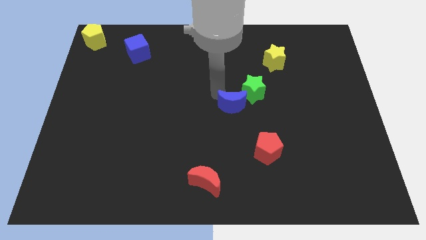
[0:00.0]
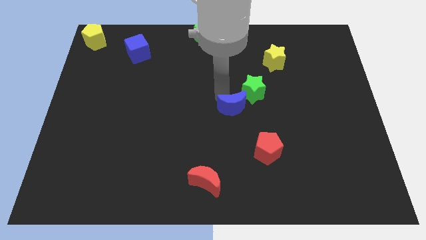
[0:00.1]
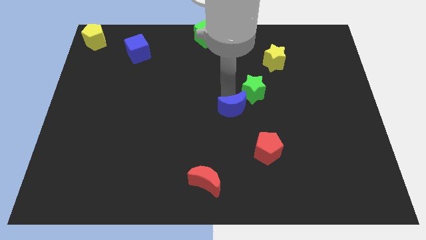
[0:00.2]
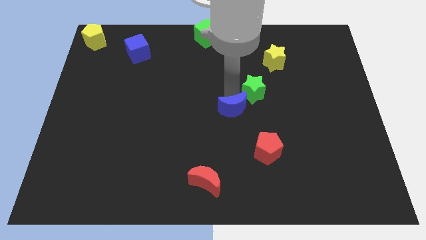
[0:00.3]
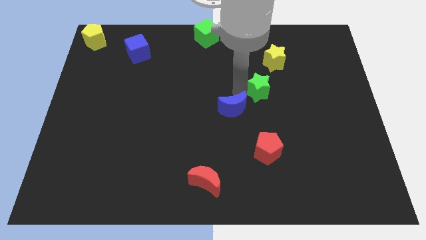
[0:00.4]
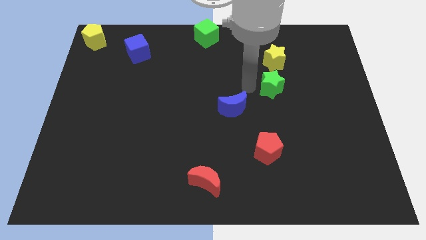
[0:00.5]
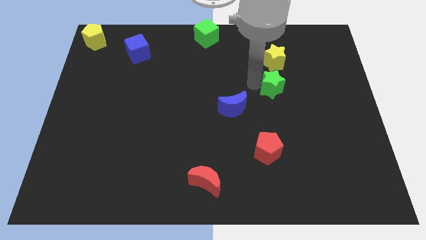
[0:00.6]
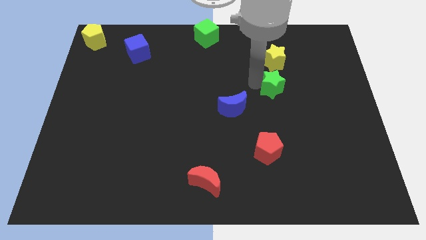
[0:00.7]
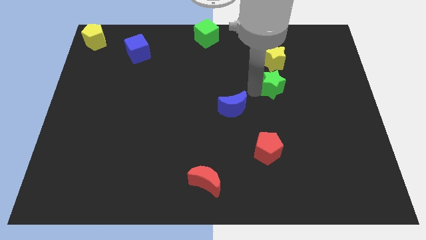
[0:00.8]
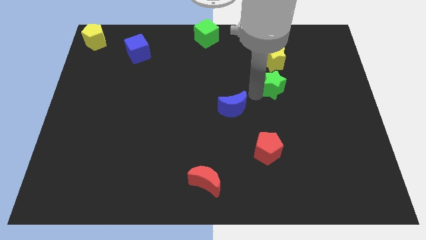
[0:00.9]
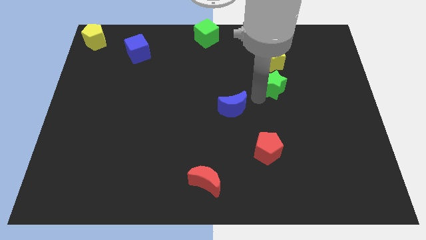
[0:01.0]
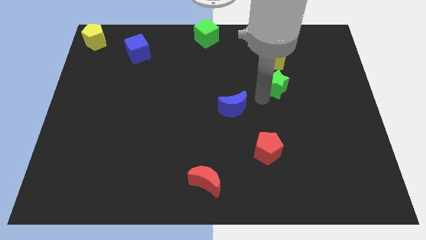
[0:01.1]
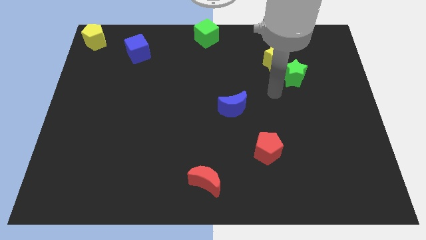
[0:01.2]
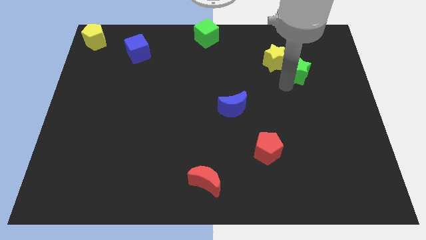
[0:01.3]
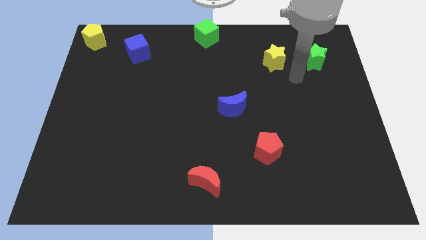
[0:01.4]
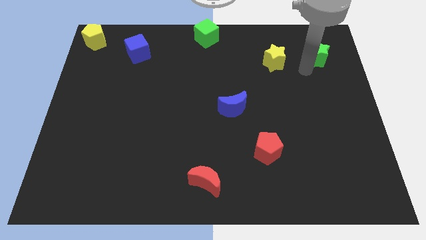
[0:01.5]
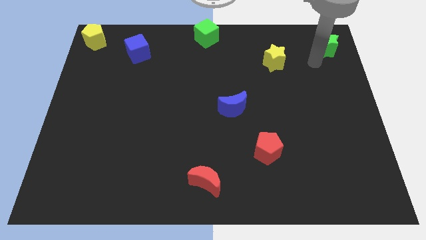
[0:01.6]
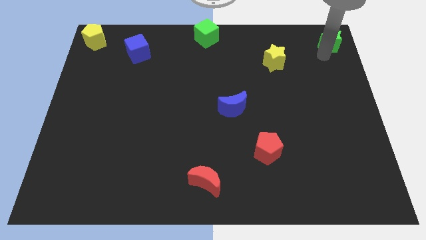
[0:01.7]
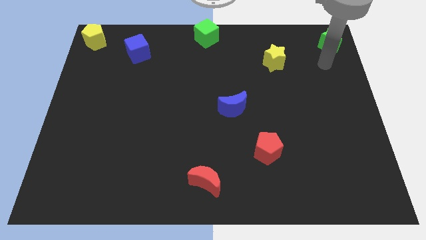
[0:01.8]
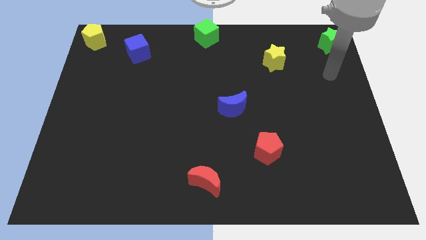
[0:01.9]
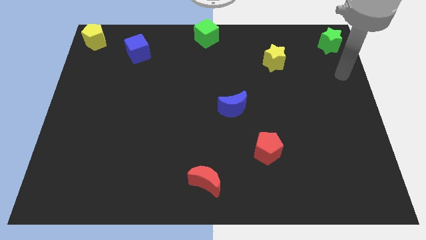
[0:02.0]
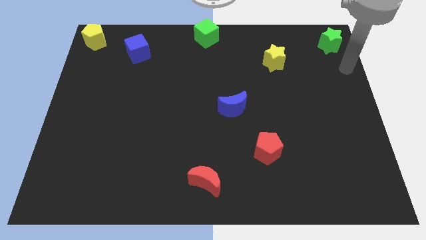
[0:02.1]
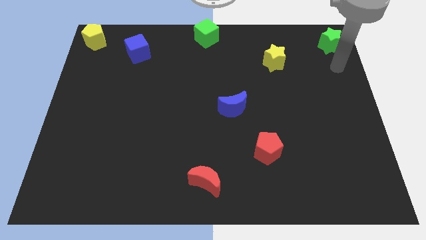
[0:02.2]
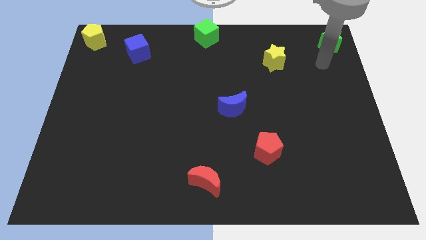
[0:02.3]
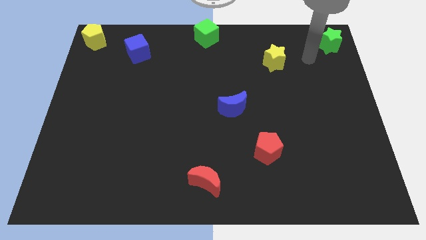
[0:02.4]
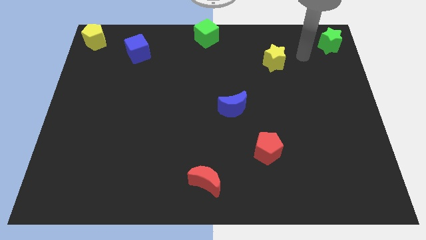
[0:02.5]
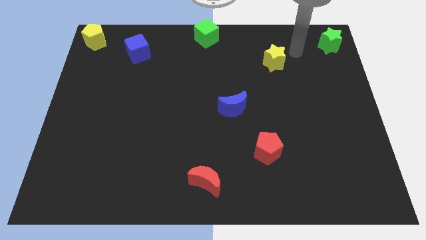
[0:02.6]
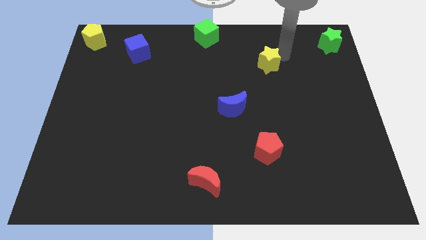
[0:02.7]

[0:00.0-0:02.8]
move the green star to the top right corner of the board

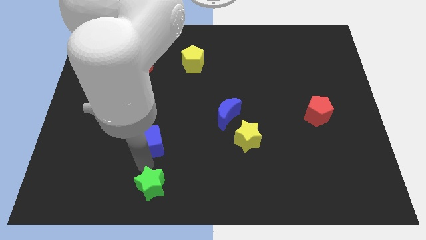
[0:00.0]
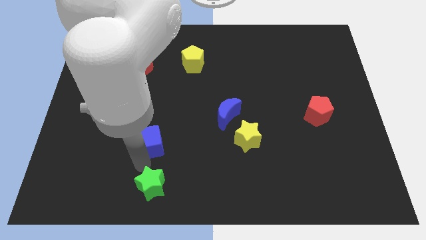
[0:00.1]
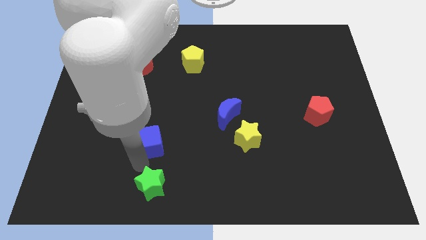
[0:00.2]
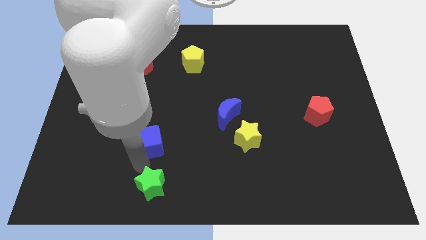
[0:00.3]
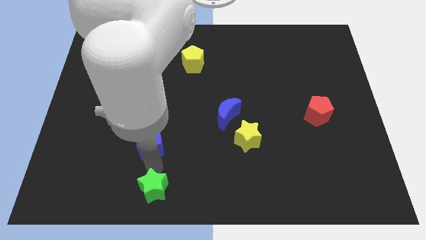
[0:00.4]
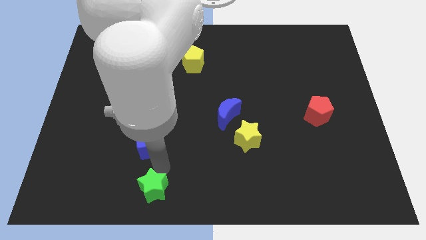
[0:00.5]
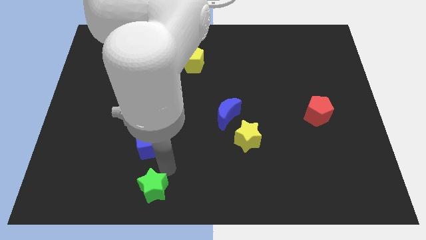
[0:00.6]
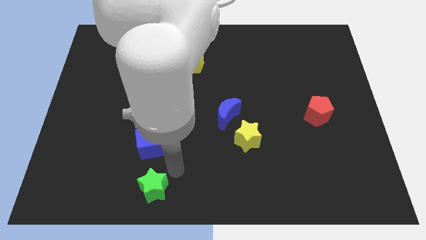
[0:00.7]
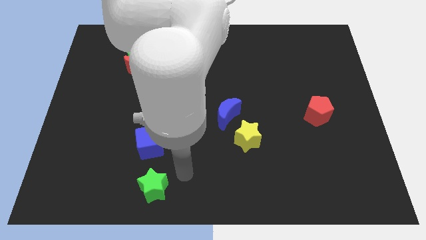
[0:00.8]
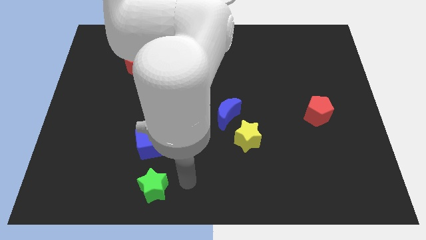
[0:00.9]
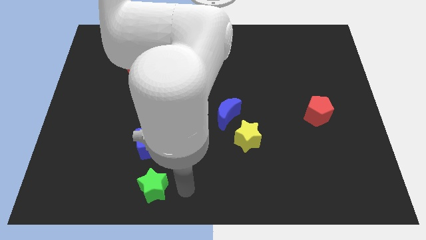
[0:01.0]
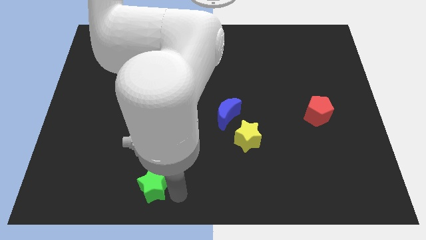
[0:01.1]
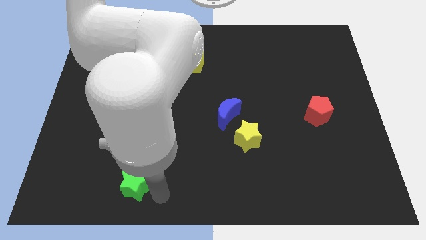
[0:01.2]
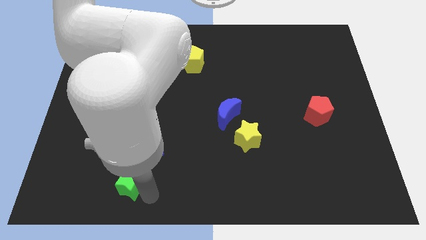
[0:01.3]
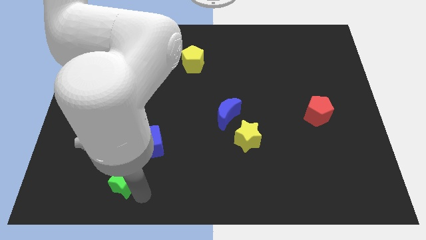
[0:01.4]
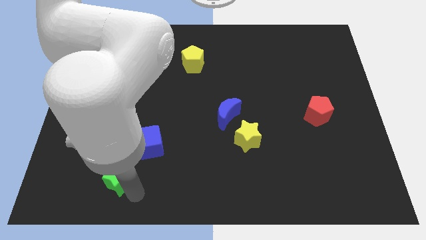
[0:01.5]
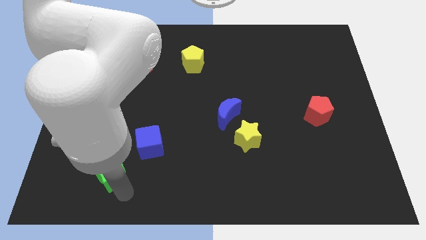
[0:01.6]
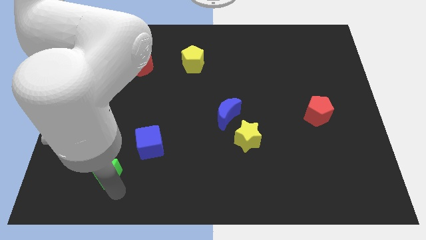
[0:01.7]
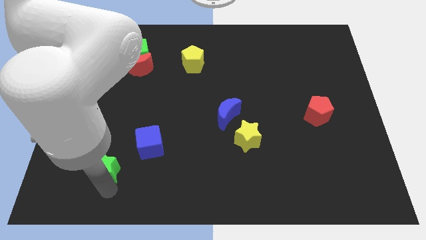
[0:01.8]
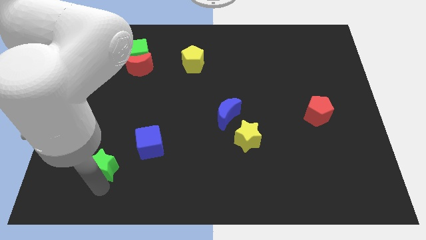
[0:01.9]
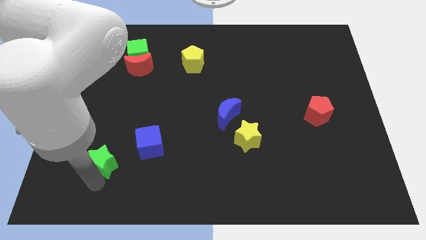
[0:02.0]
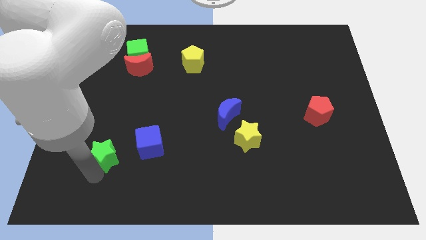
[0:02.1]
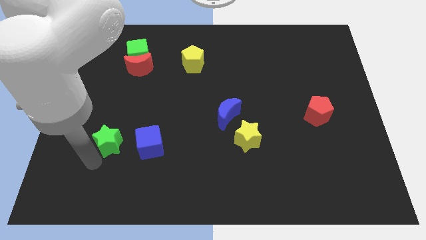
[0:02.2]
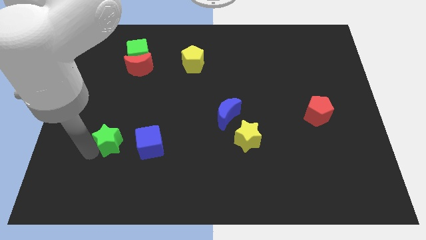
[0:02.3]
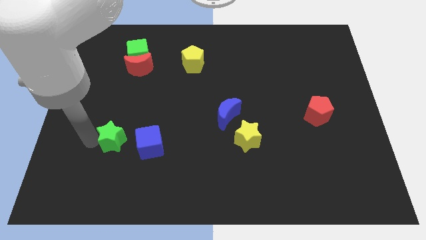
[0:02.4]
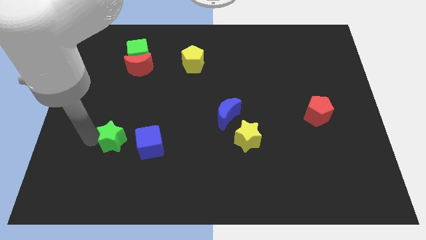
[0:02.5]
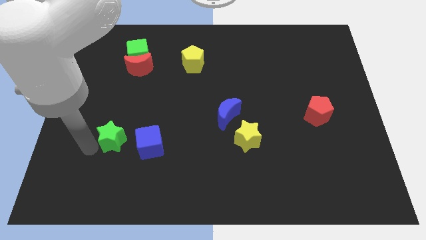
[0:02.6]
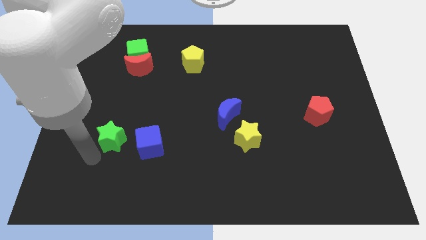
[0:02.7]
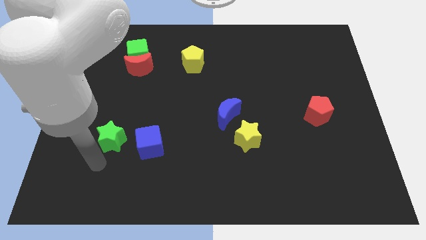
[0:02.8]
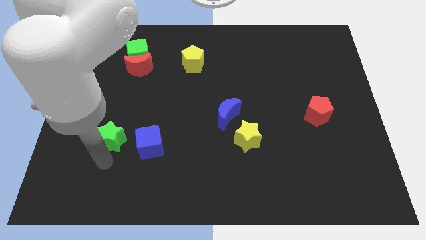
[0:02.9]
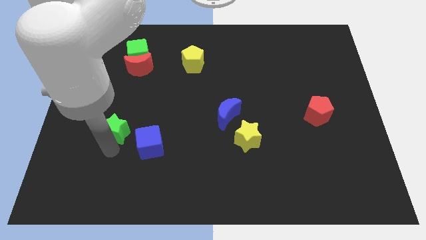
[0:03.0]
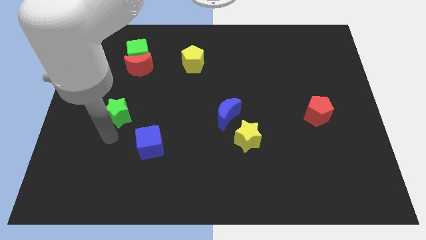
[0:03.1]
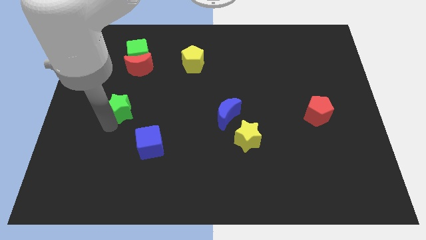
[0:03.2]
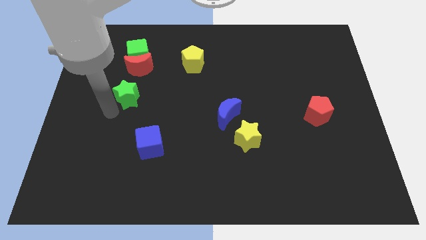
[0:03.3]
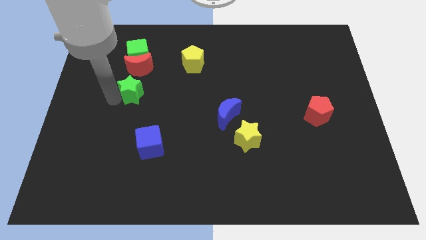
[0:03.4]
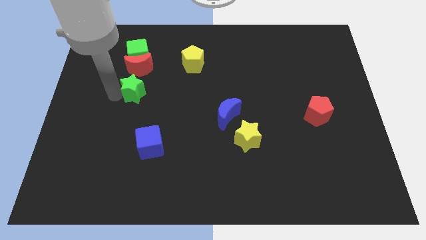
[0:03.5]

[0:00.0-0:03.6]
push the green star towards the red crescent

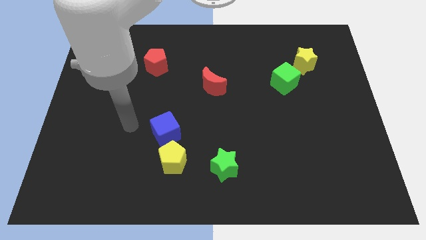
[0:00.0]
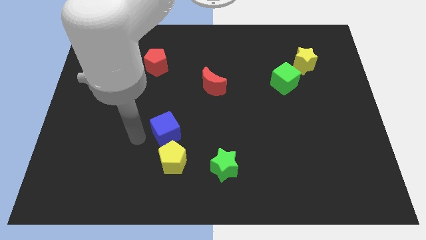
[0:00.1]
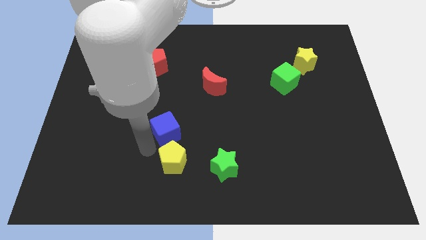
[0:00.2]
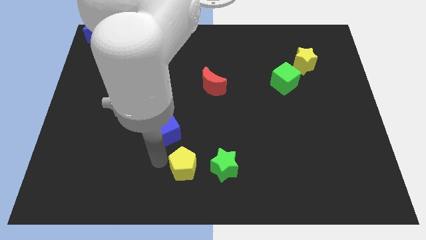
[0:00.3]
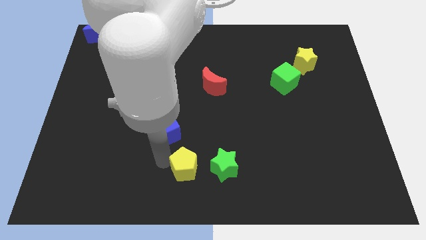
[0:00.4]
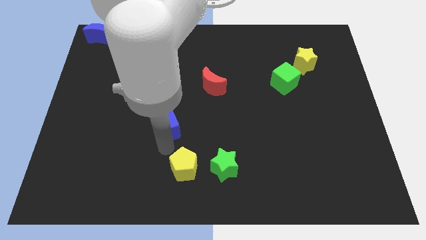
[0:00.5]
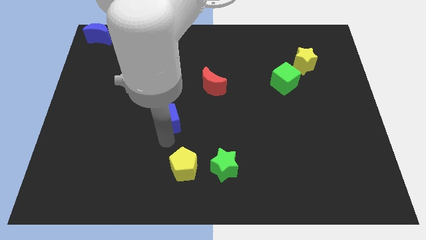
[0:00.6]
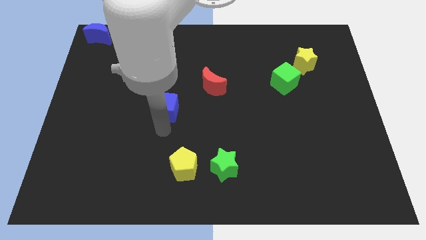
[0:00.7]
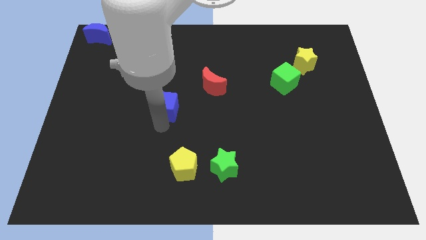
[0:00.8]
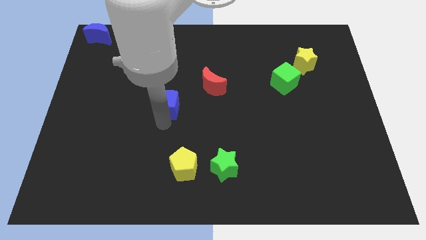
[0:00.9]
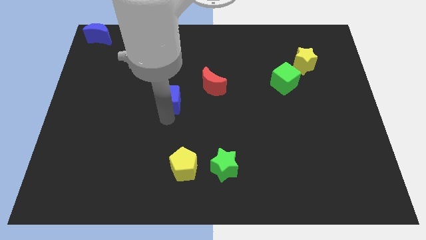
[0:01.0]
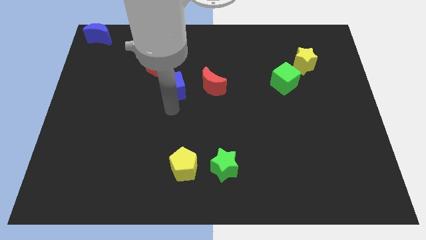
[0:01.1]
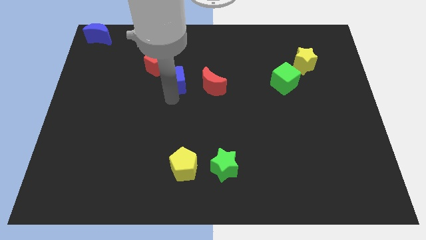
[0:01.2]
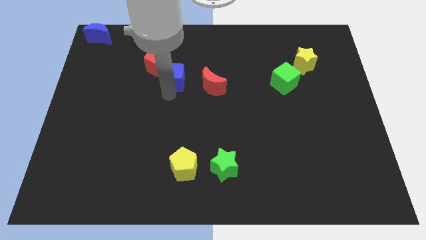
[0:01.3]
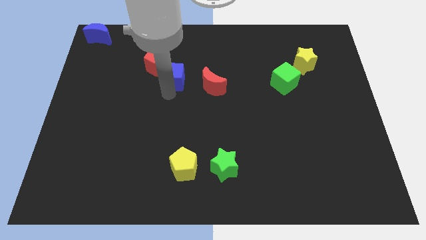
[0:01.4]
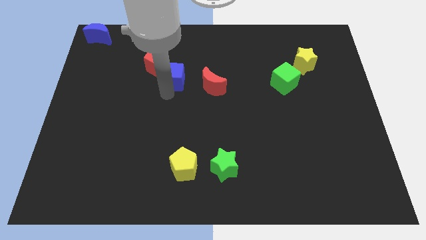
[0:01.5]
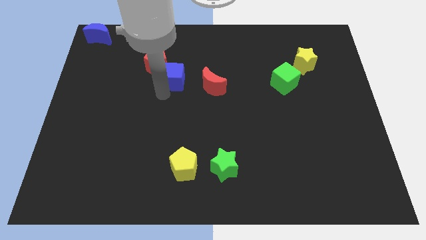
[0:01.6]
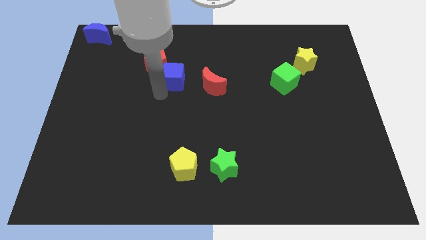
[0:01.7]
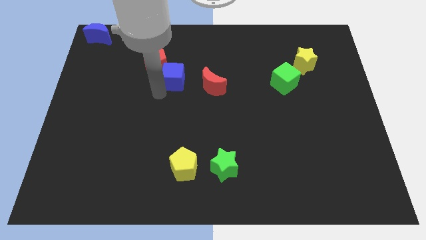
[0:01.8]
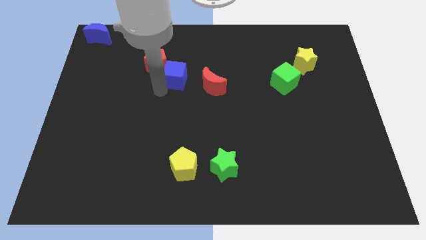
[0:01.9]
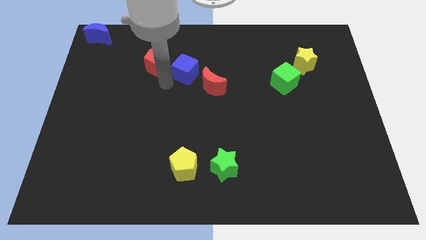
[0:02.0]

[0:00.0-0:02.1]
move the blue cube in between the red moon and red pentagon

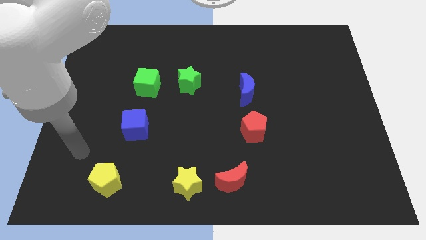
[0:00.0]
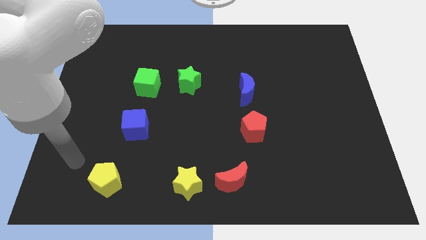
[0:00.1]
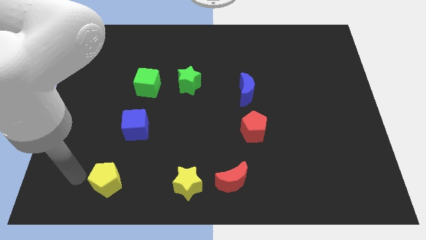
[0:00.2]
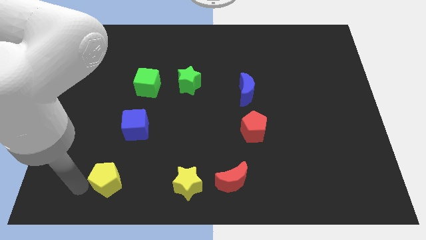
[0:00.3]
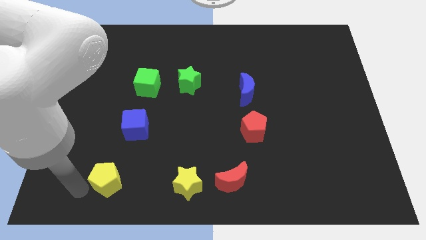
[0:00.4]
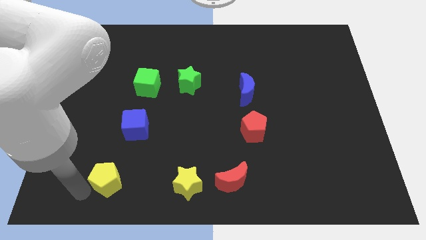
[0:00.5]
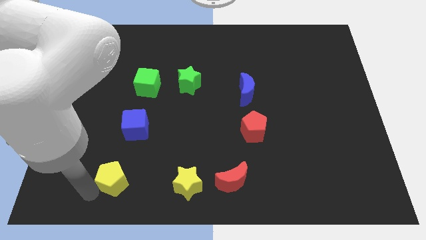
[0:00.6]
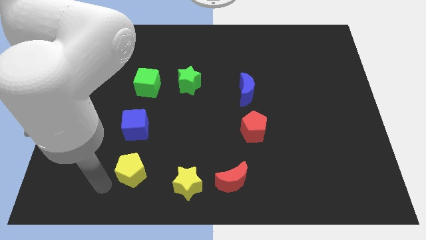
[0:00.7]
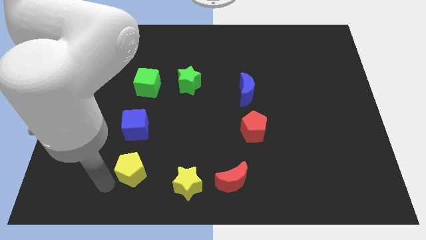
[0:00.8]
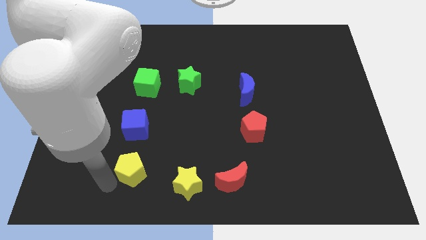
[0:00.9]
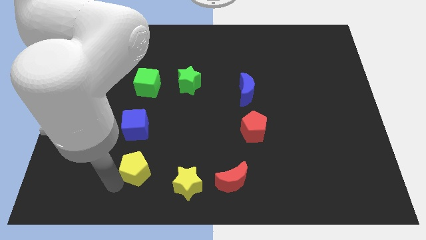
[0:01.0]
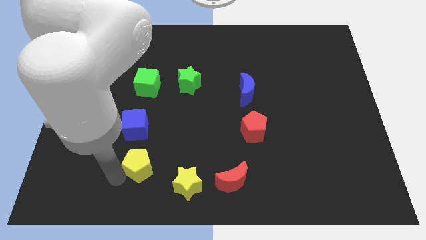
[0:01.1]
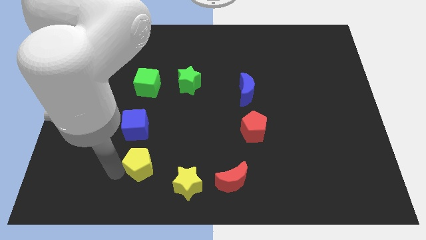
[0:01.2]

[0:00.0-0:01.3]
move the yellow pentagon diagonally top left to yellow star
